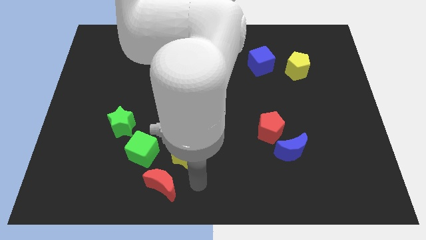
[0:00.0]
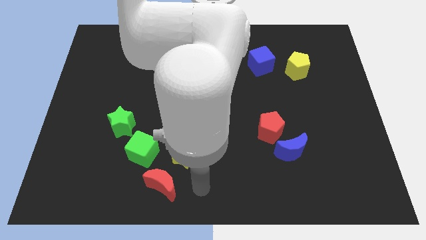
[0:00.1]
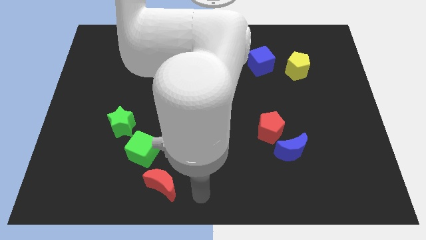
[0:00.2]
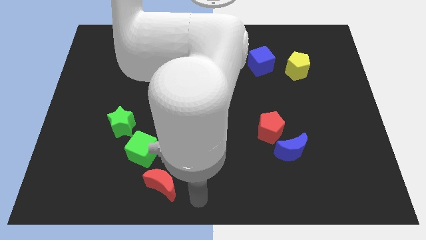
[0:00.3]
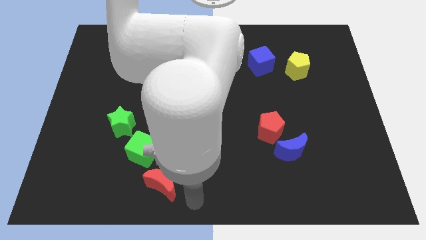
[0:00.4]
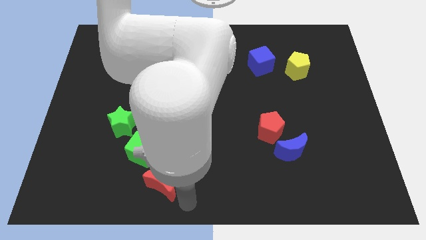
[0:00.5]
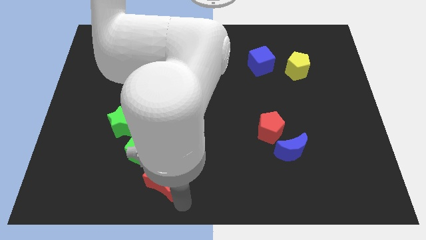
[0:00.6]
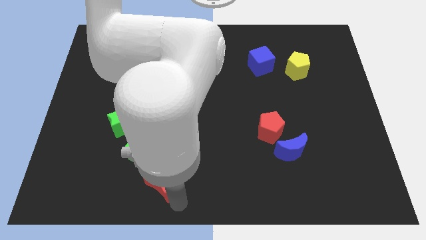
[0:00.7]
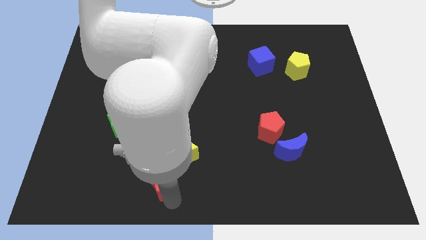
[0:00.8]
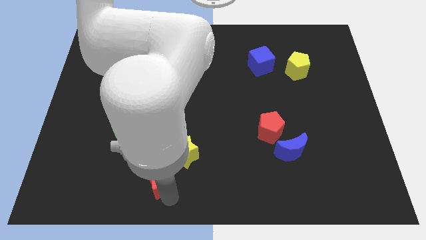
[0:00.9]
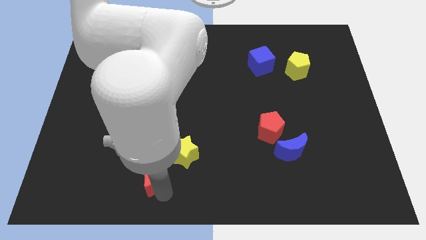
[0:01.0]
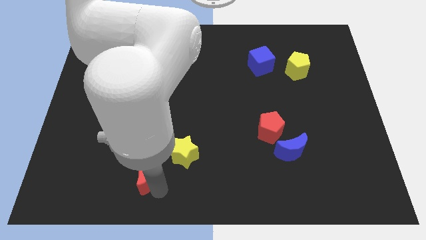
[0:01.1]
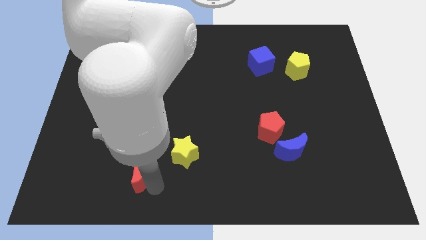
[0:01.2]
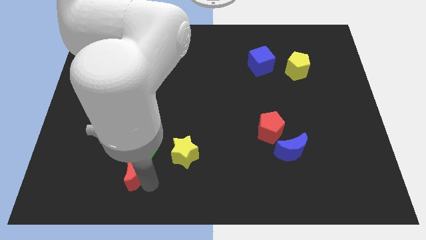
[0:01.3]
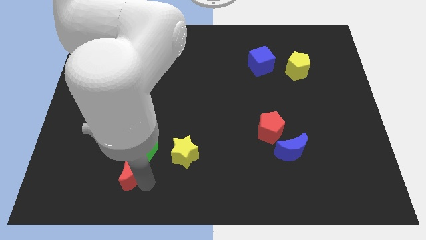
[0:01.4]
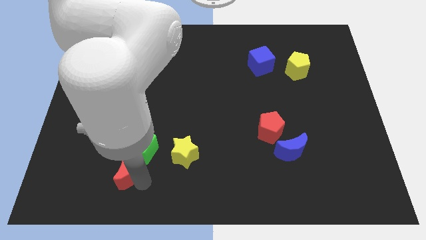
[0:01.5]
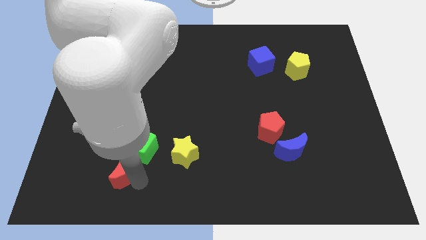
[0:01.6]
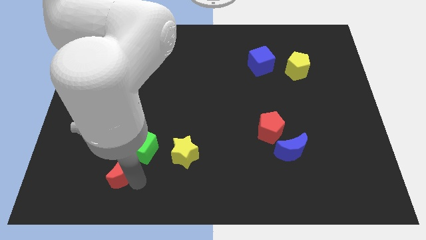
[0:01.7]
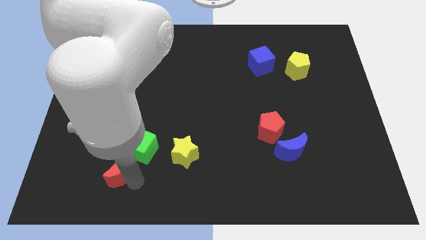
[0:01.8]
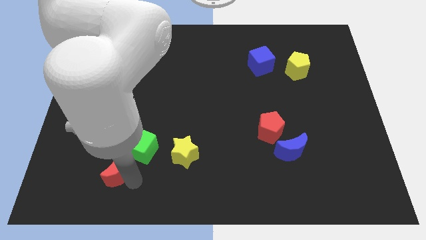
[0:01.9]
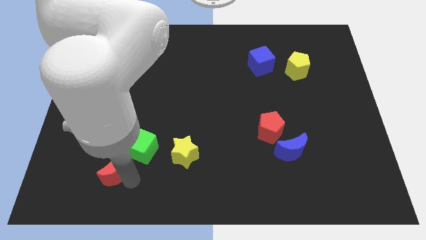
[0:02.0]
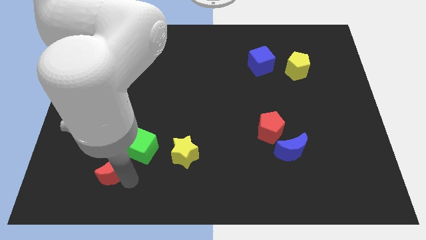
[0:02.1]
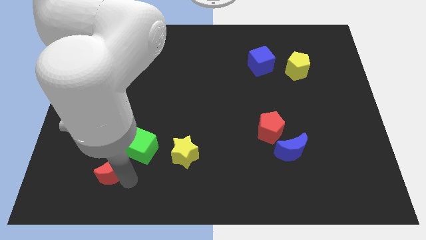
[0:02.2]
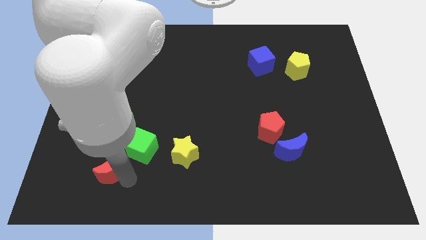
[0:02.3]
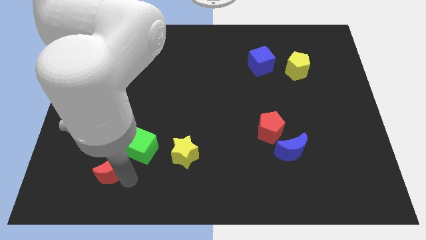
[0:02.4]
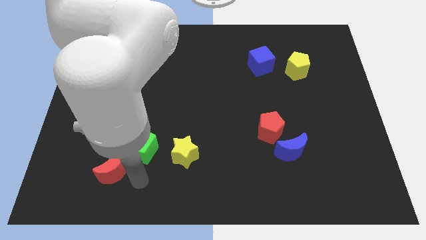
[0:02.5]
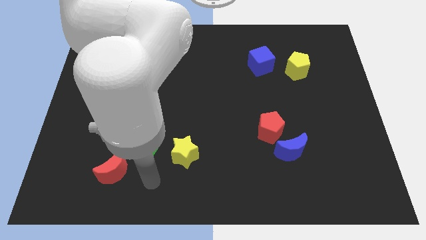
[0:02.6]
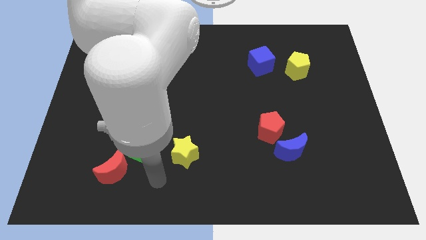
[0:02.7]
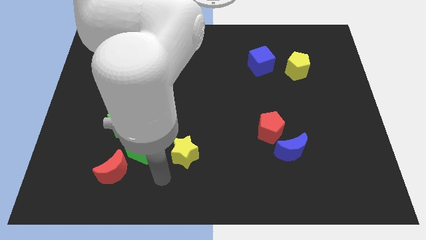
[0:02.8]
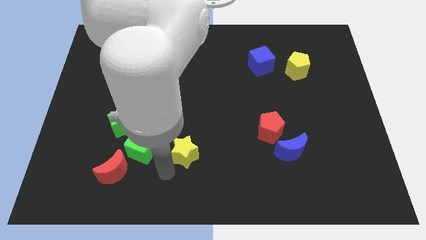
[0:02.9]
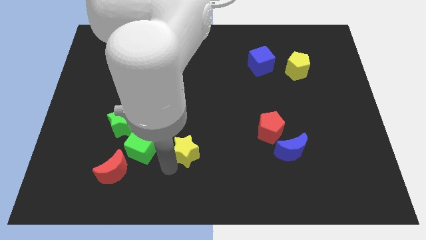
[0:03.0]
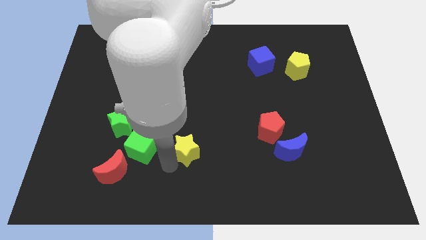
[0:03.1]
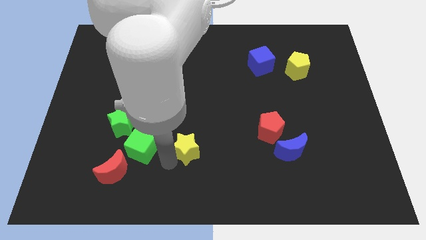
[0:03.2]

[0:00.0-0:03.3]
move the red moon to the bottom of the green cube

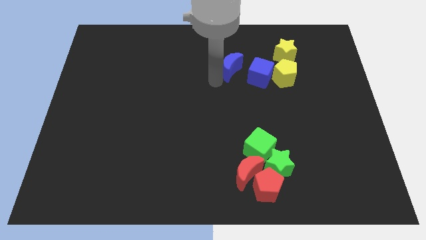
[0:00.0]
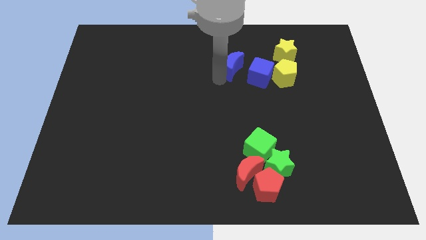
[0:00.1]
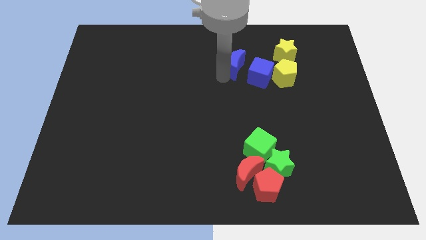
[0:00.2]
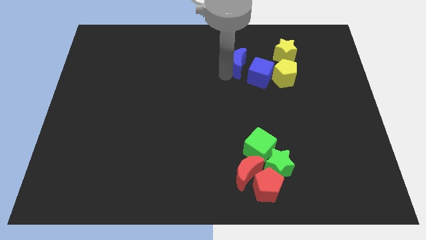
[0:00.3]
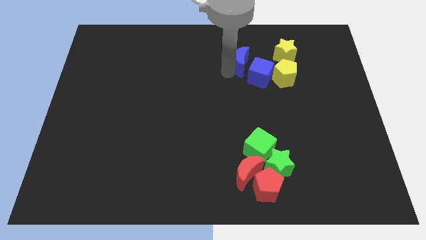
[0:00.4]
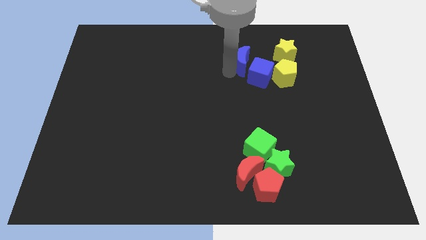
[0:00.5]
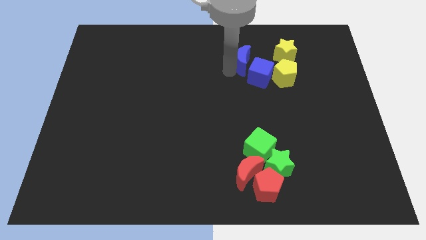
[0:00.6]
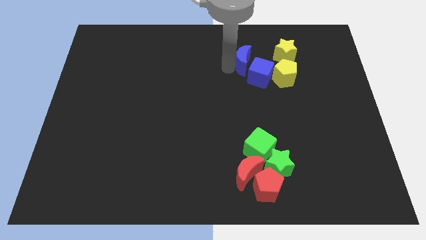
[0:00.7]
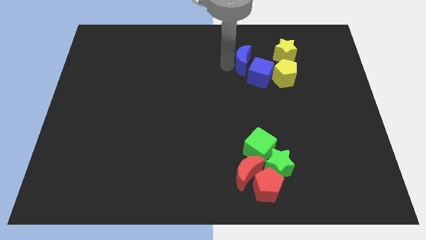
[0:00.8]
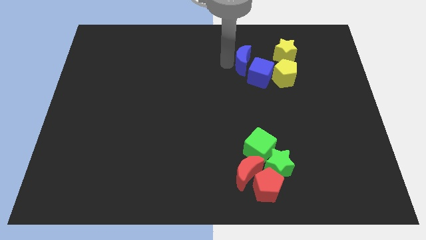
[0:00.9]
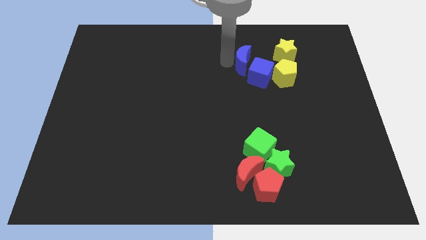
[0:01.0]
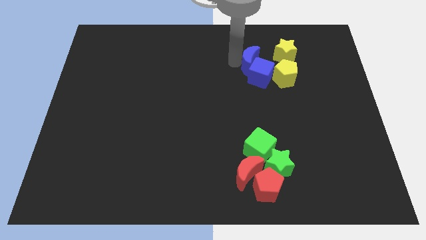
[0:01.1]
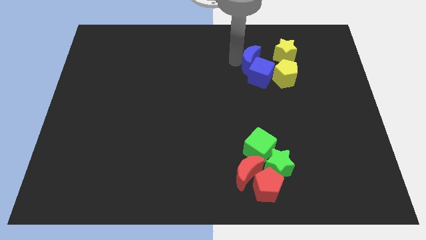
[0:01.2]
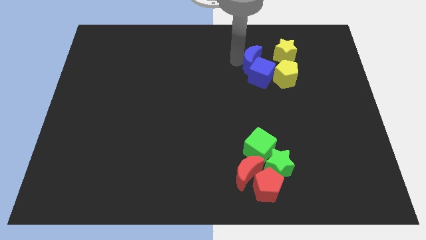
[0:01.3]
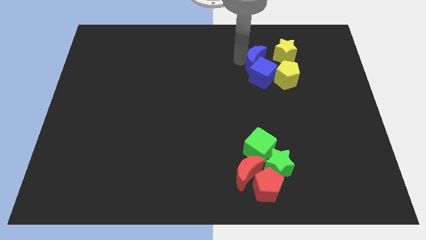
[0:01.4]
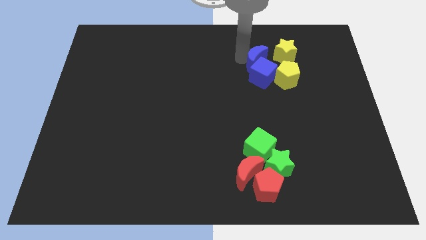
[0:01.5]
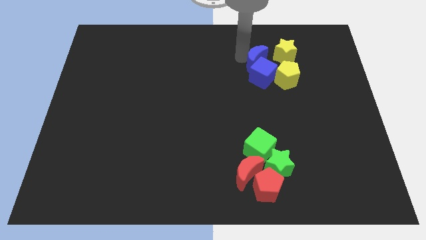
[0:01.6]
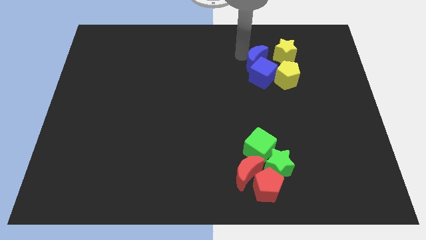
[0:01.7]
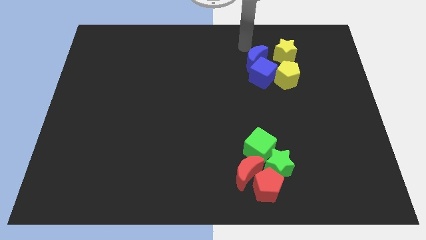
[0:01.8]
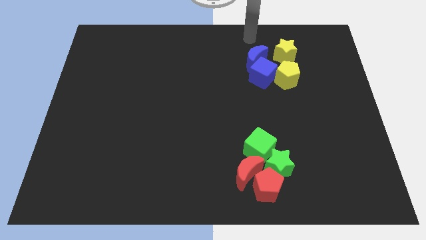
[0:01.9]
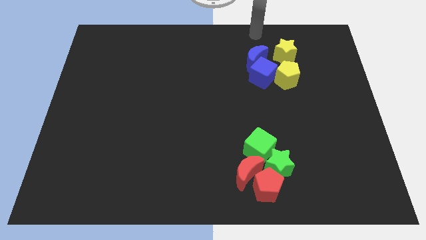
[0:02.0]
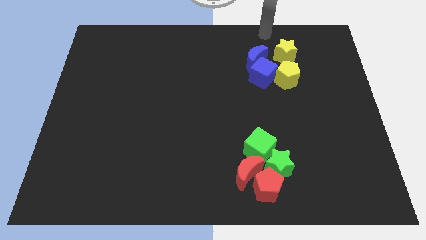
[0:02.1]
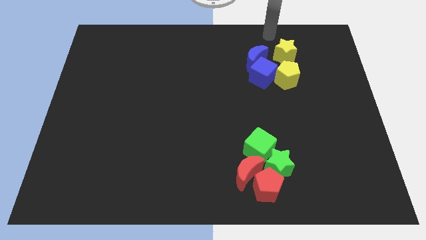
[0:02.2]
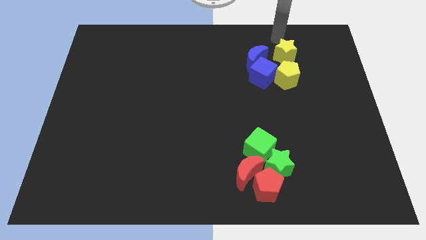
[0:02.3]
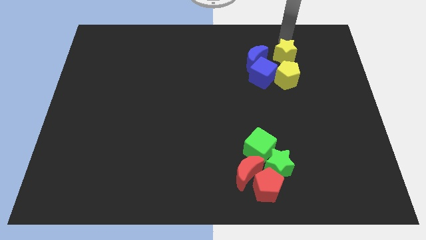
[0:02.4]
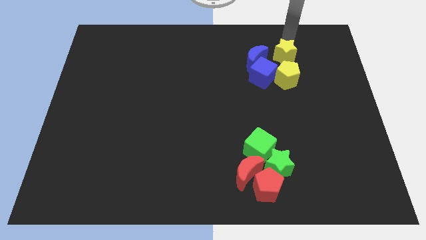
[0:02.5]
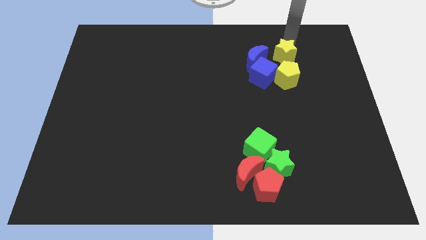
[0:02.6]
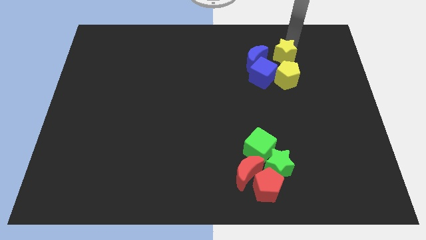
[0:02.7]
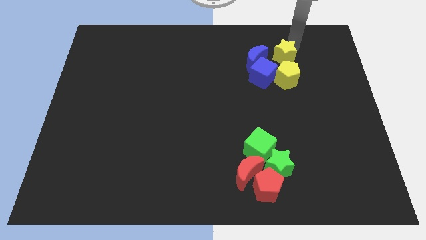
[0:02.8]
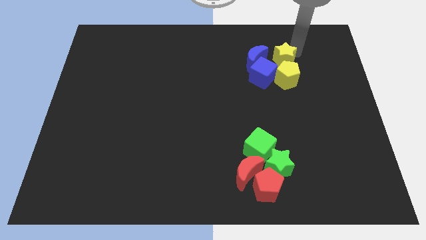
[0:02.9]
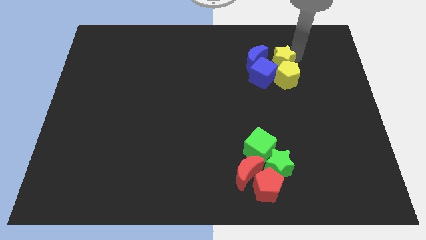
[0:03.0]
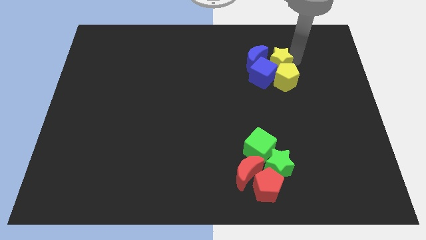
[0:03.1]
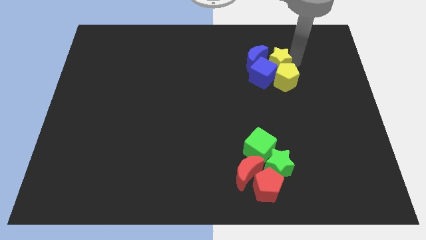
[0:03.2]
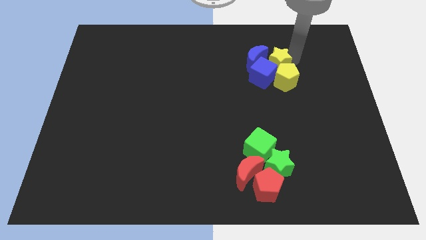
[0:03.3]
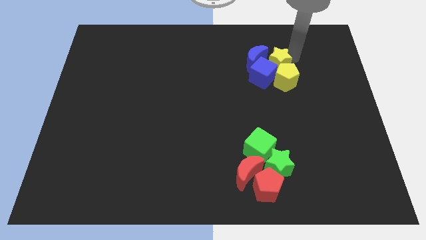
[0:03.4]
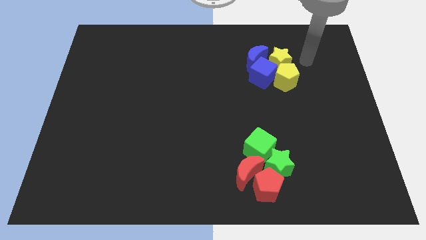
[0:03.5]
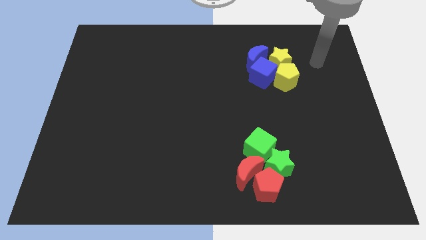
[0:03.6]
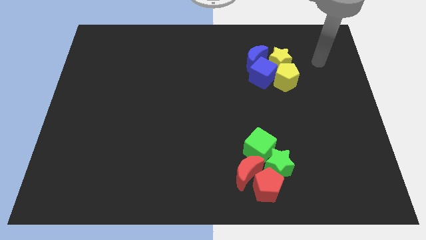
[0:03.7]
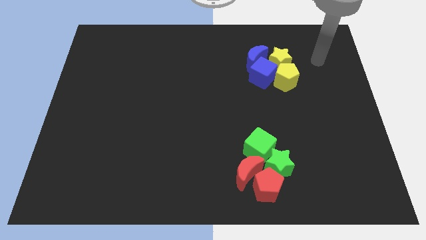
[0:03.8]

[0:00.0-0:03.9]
adjust the blue crescent and the yellow star towards the group of blocks

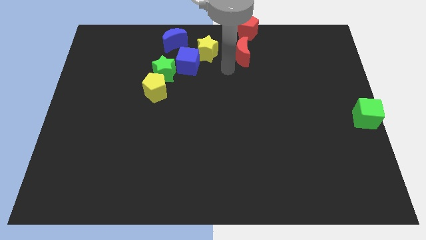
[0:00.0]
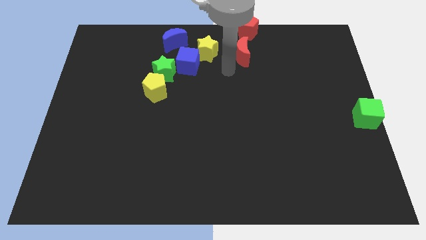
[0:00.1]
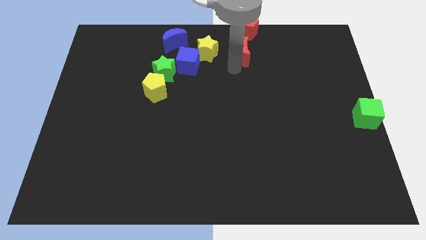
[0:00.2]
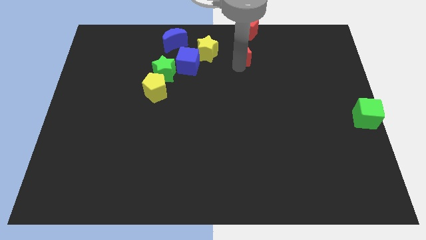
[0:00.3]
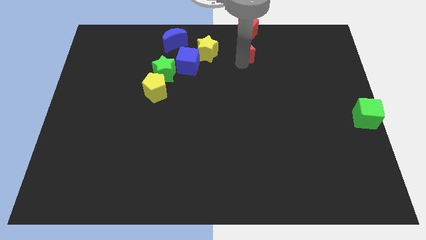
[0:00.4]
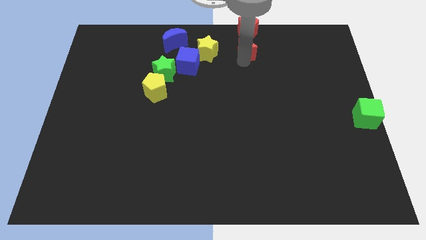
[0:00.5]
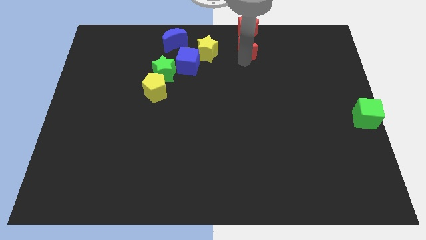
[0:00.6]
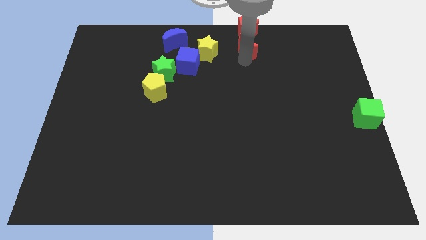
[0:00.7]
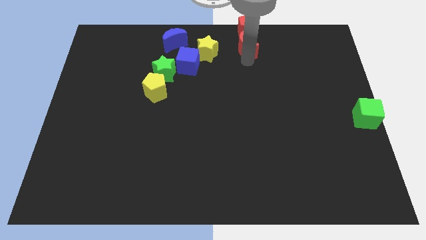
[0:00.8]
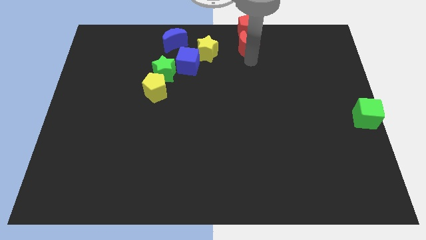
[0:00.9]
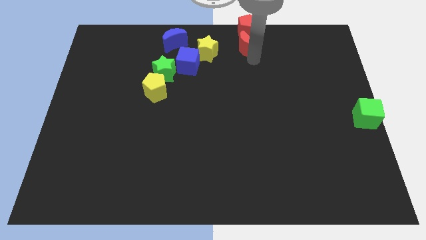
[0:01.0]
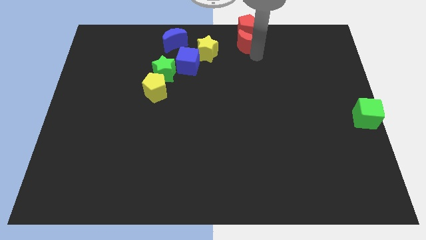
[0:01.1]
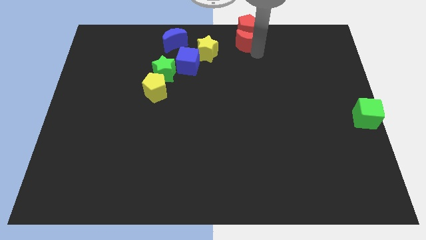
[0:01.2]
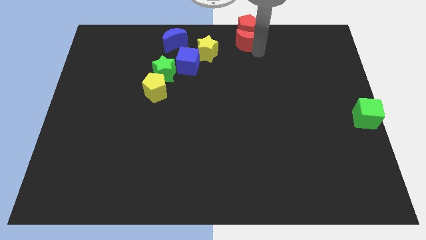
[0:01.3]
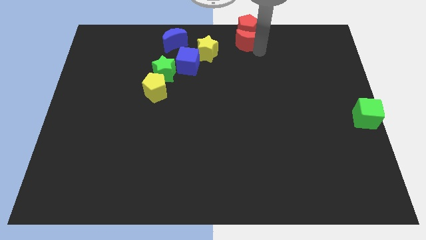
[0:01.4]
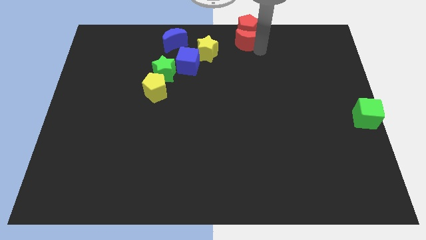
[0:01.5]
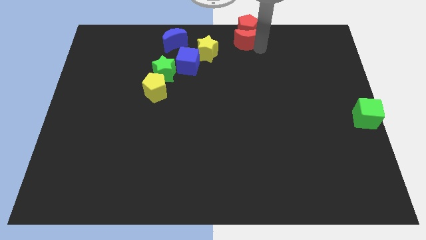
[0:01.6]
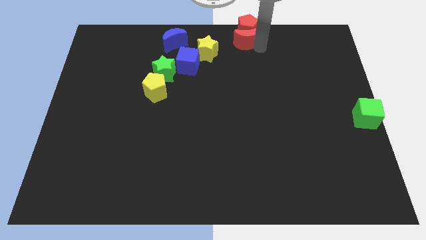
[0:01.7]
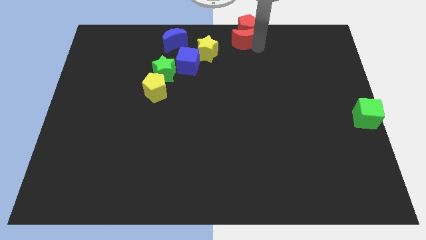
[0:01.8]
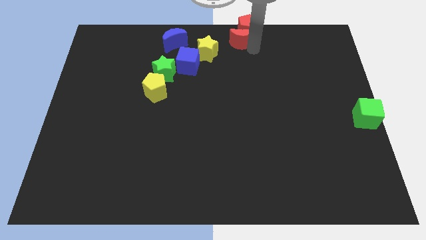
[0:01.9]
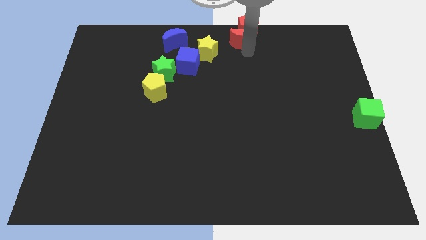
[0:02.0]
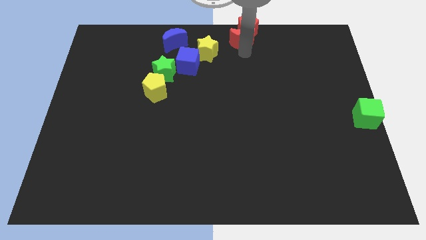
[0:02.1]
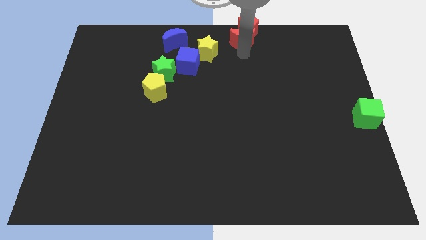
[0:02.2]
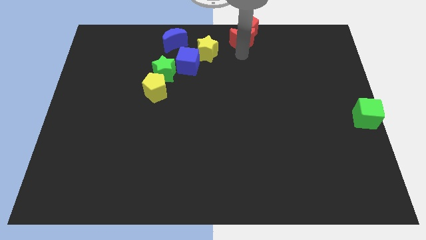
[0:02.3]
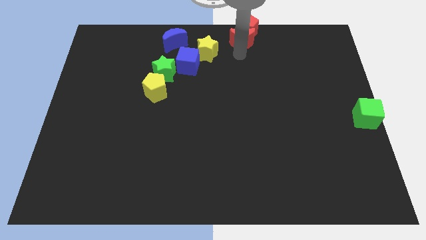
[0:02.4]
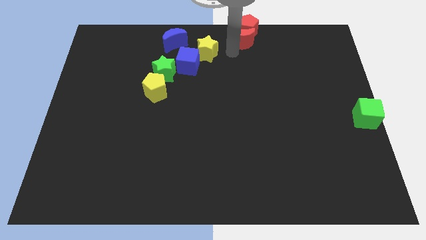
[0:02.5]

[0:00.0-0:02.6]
place the red moon below the red pentagon
